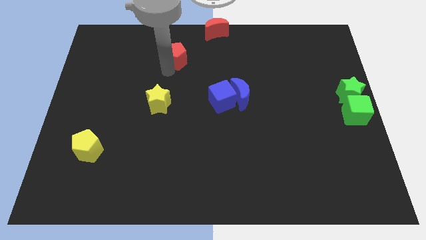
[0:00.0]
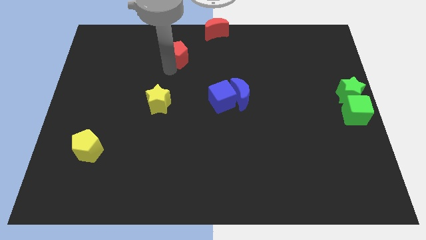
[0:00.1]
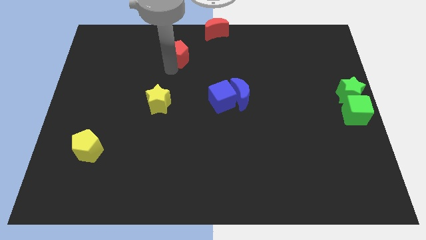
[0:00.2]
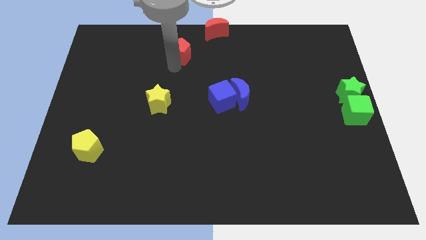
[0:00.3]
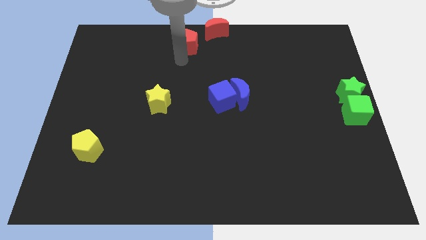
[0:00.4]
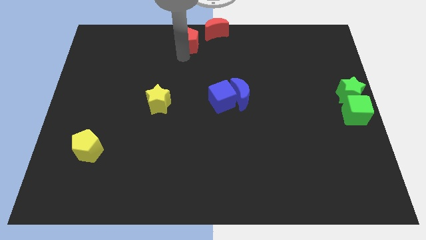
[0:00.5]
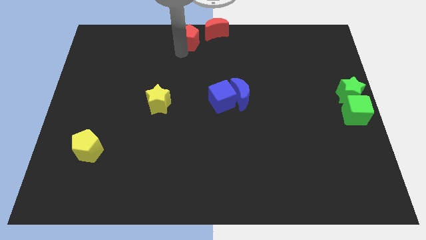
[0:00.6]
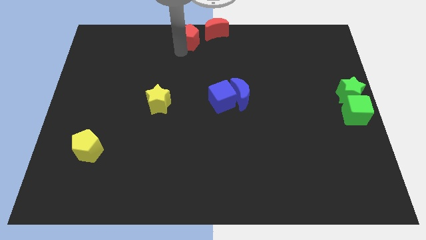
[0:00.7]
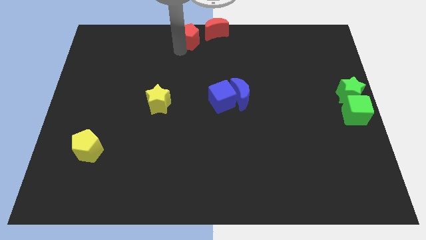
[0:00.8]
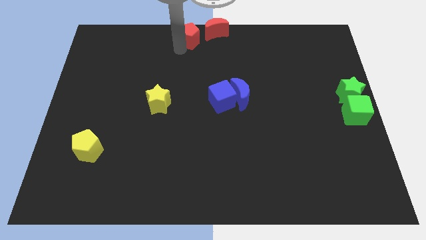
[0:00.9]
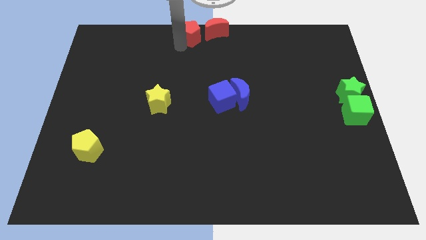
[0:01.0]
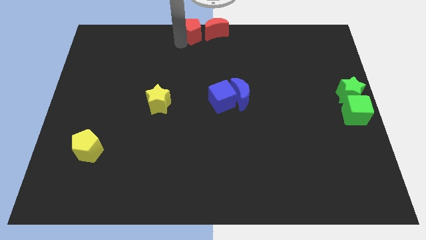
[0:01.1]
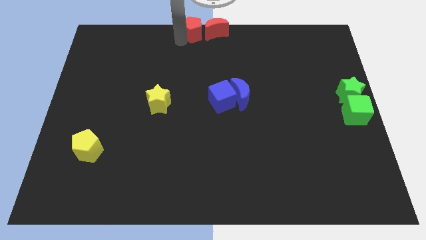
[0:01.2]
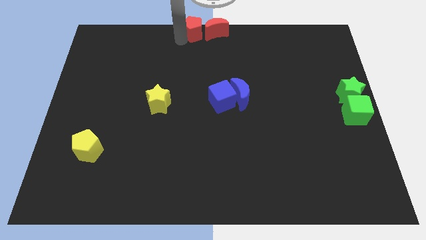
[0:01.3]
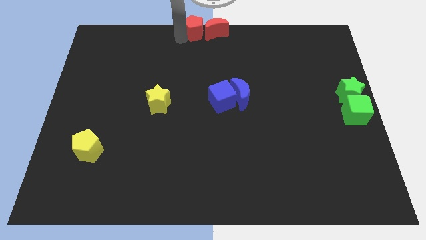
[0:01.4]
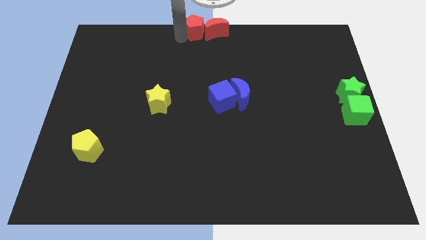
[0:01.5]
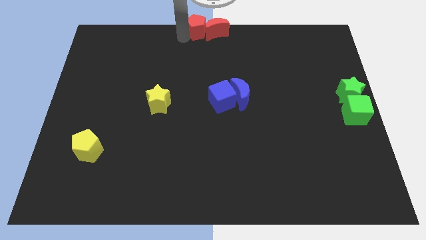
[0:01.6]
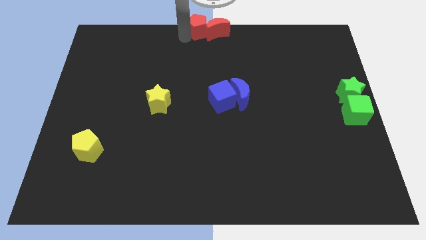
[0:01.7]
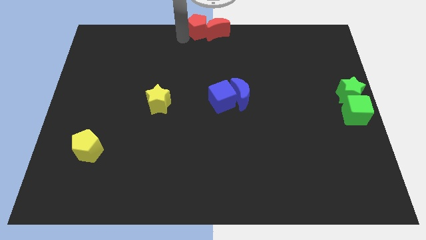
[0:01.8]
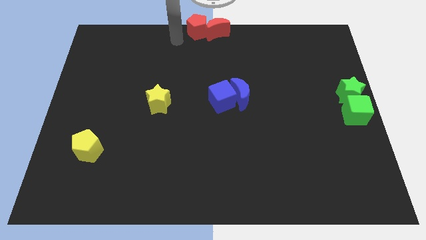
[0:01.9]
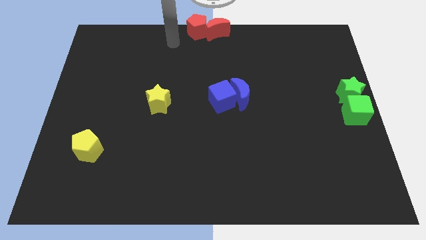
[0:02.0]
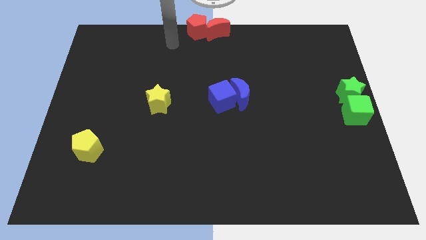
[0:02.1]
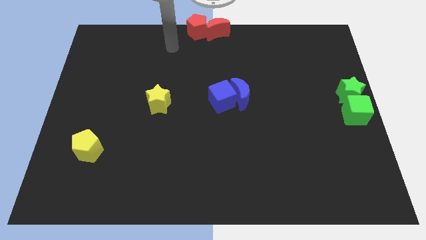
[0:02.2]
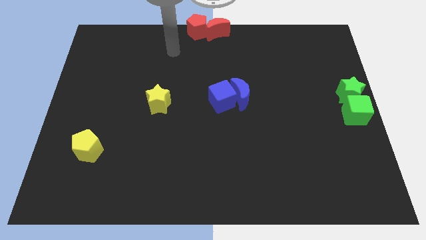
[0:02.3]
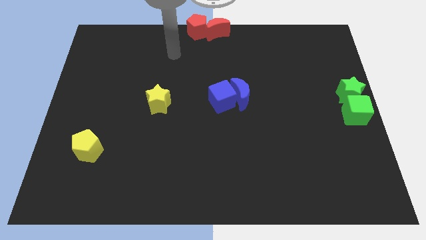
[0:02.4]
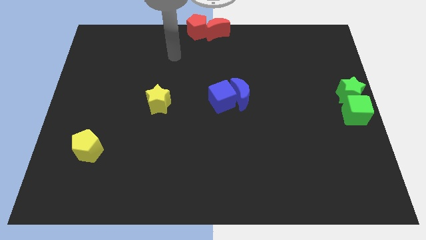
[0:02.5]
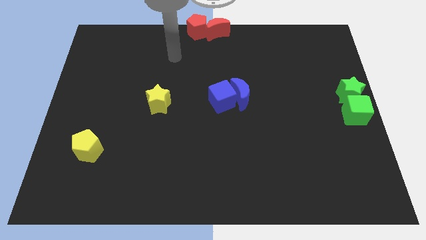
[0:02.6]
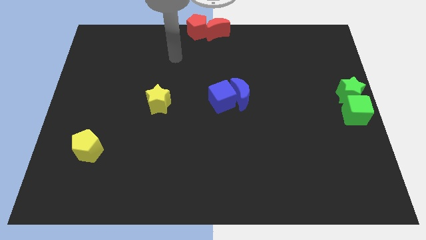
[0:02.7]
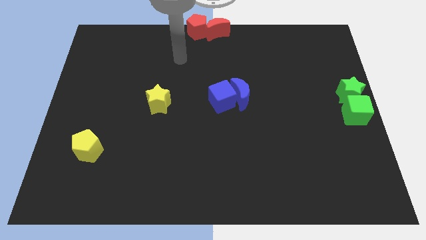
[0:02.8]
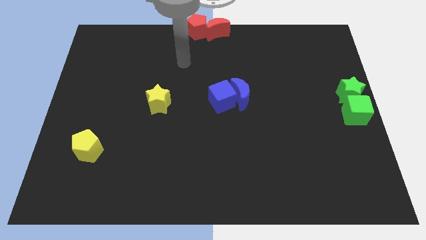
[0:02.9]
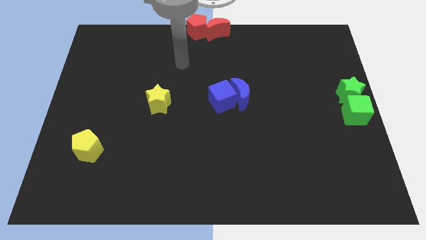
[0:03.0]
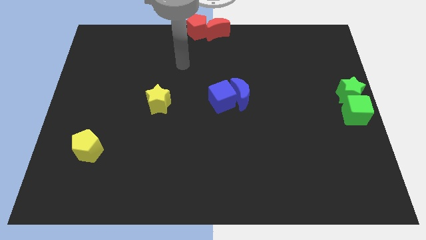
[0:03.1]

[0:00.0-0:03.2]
push the red pentagon left to the red moon

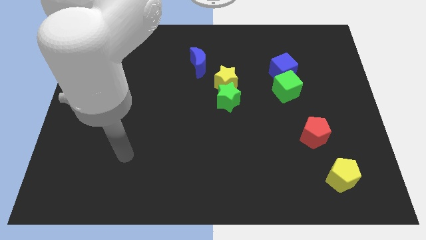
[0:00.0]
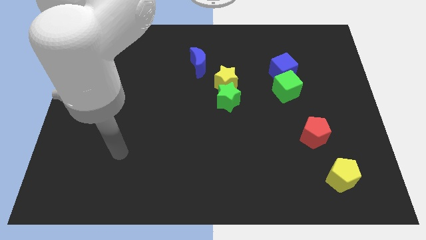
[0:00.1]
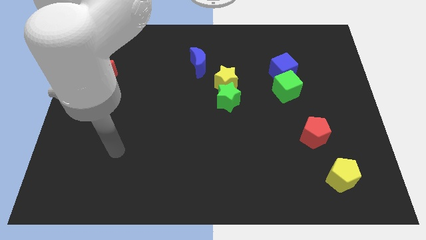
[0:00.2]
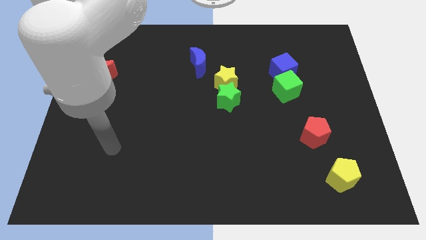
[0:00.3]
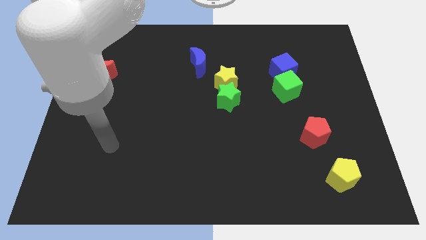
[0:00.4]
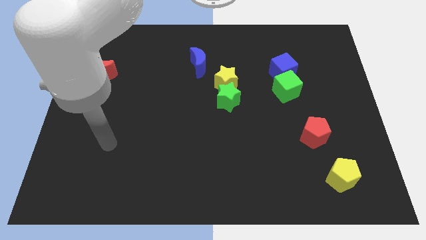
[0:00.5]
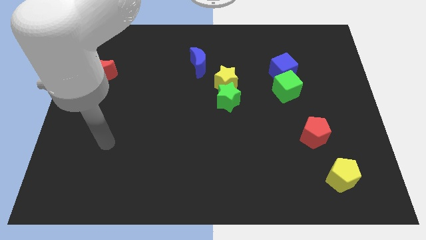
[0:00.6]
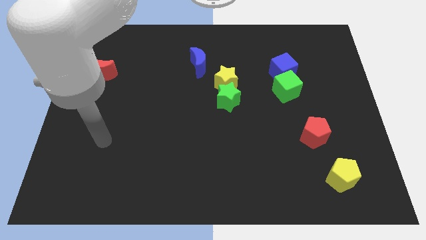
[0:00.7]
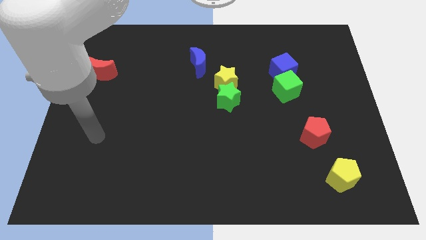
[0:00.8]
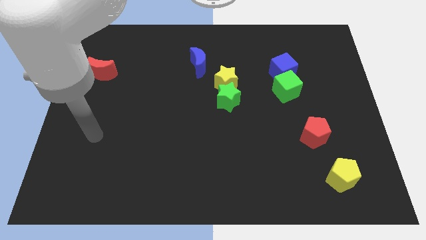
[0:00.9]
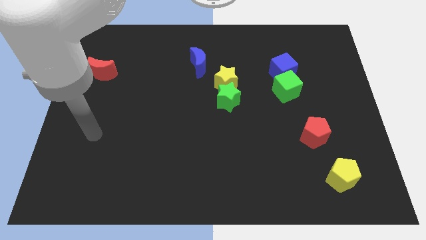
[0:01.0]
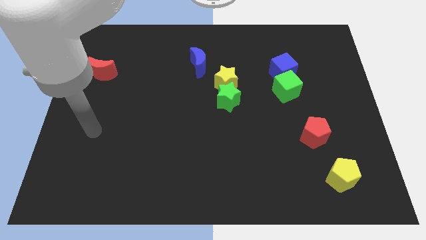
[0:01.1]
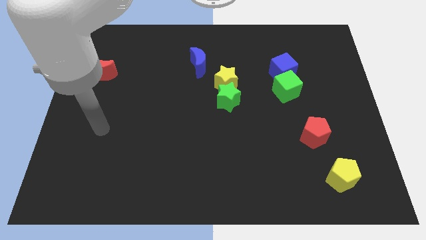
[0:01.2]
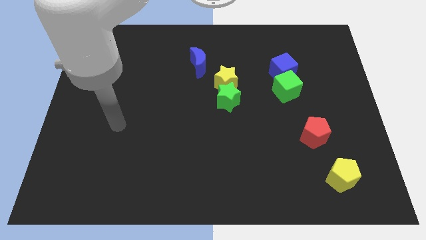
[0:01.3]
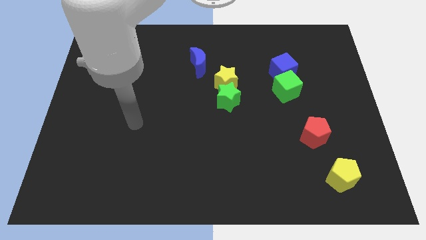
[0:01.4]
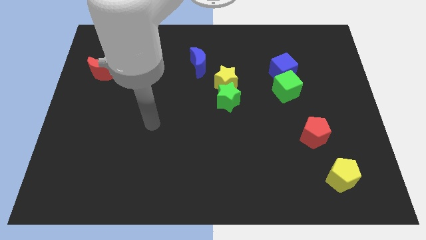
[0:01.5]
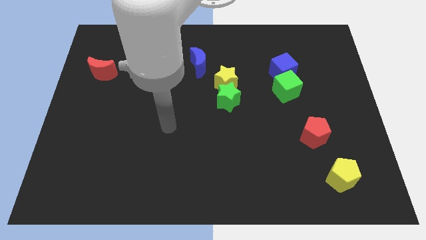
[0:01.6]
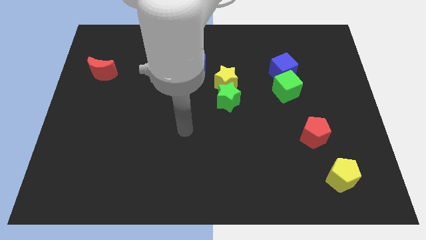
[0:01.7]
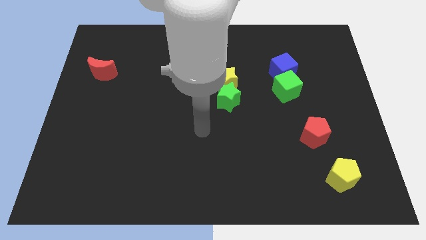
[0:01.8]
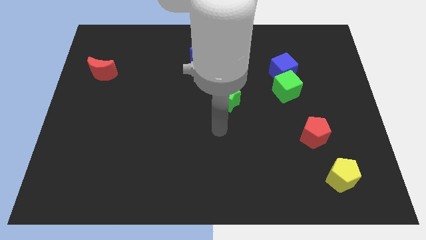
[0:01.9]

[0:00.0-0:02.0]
point your arm towards the center of the board

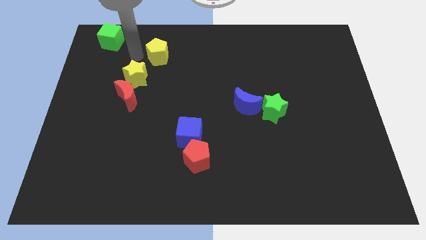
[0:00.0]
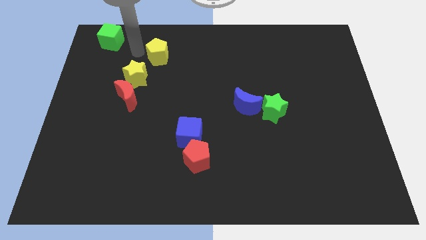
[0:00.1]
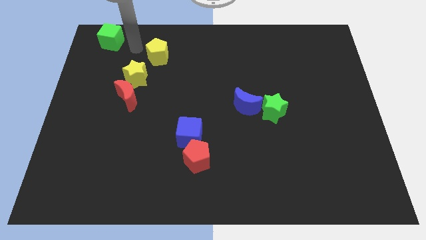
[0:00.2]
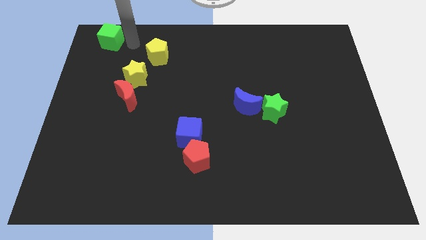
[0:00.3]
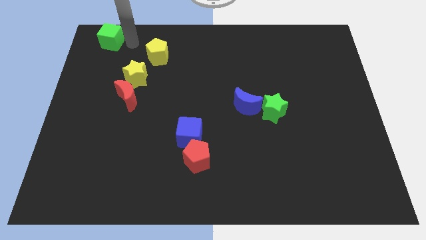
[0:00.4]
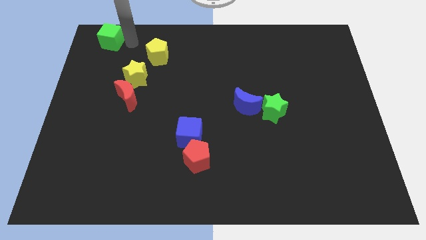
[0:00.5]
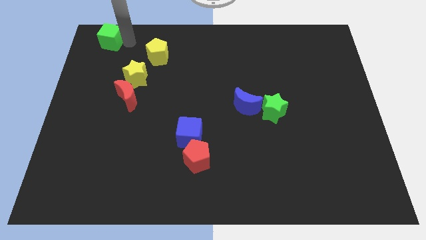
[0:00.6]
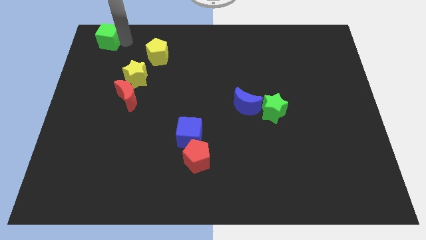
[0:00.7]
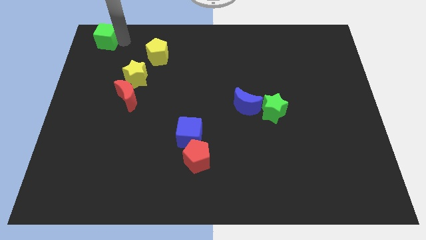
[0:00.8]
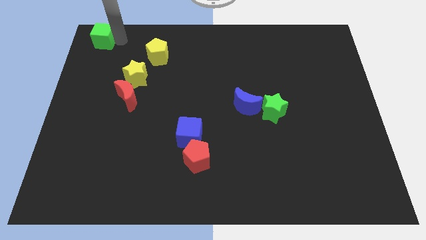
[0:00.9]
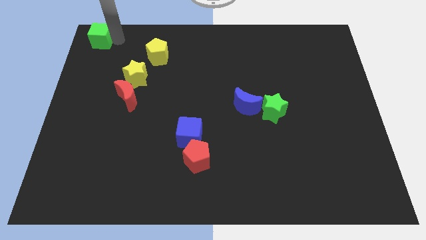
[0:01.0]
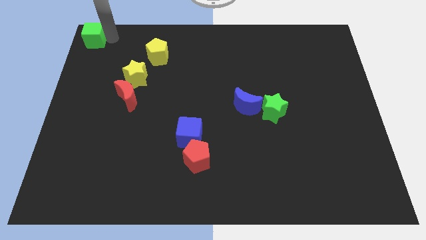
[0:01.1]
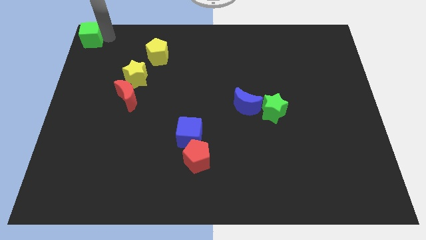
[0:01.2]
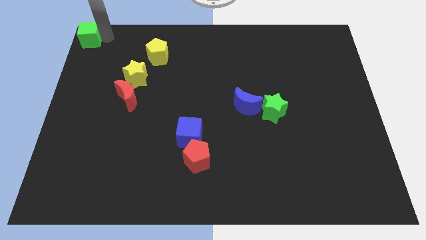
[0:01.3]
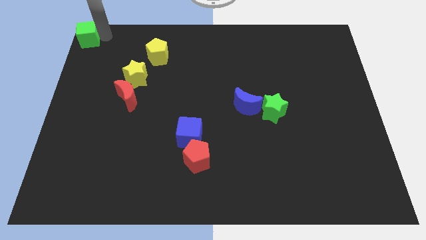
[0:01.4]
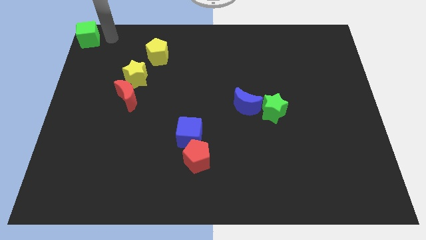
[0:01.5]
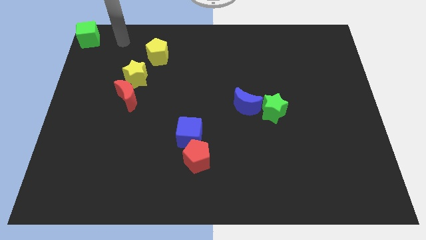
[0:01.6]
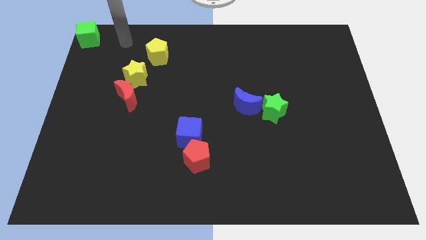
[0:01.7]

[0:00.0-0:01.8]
move the green cube to the top left corner

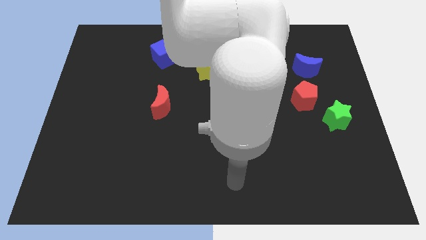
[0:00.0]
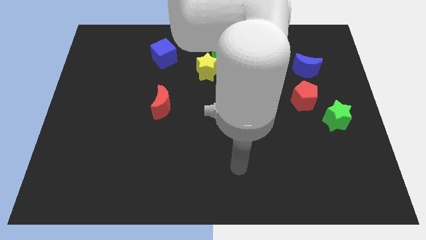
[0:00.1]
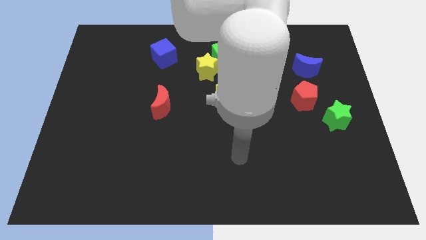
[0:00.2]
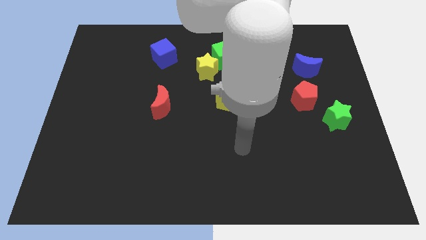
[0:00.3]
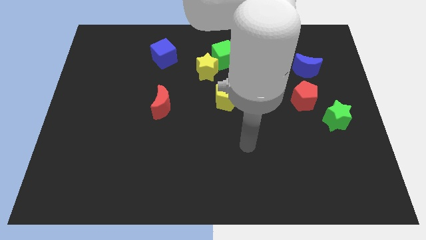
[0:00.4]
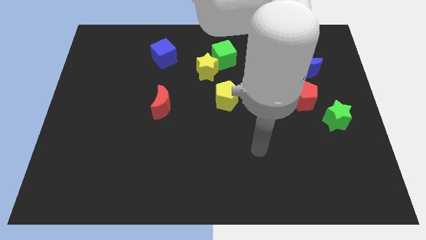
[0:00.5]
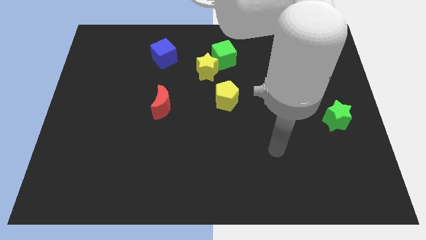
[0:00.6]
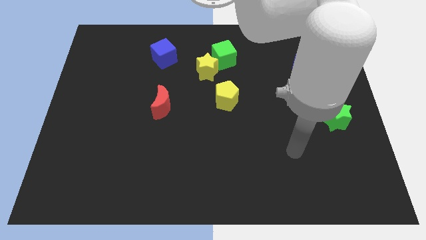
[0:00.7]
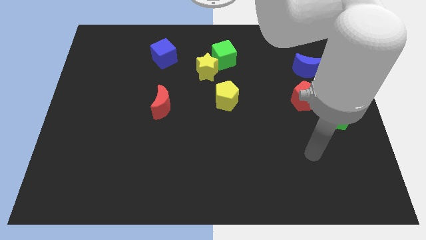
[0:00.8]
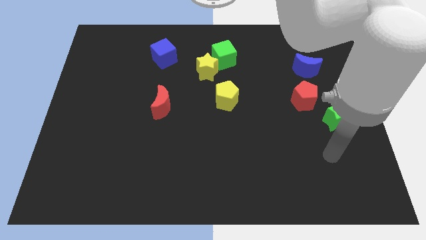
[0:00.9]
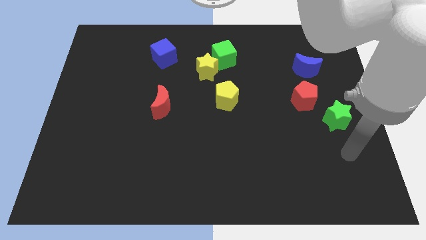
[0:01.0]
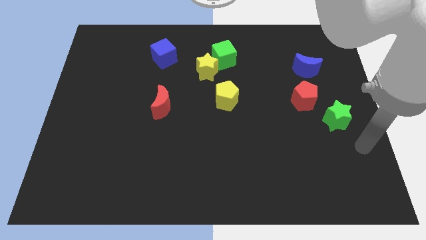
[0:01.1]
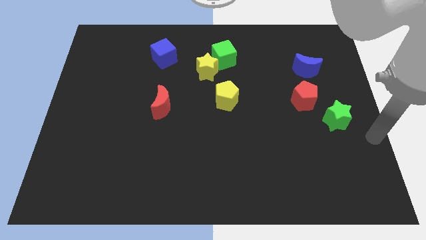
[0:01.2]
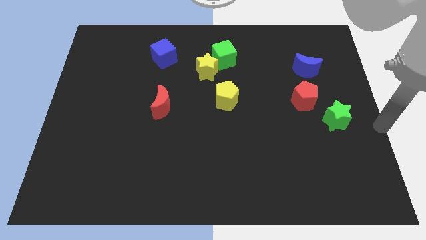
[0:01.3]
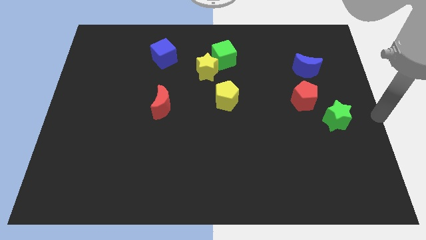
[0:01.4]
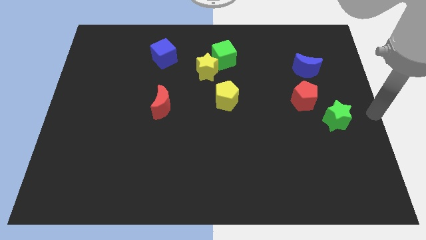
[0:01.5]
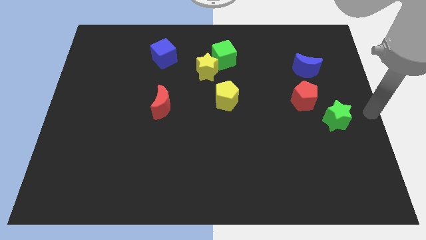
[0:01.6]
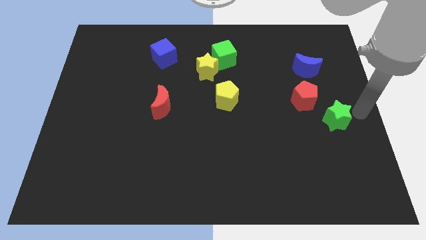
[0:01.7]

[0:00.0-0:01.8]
move your arm to the right side of the green star

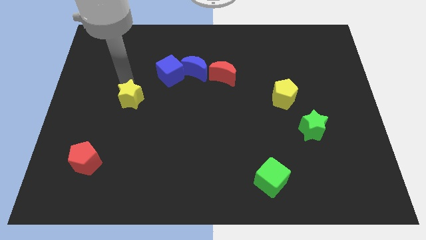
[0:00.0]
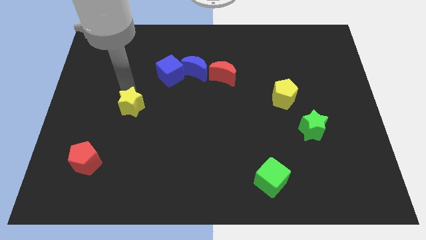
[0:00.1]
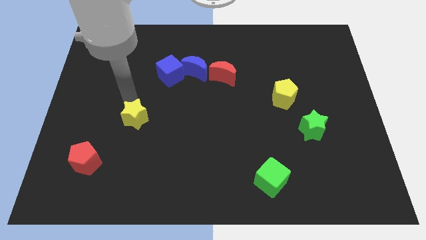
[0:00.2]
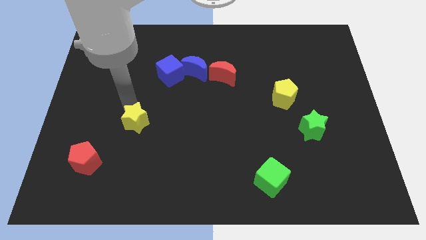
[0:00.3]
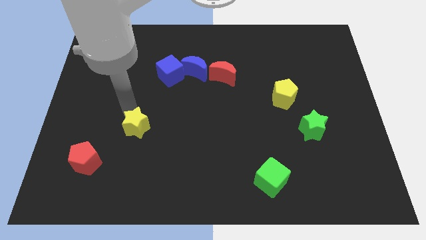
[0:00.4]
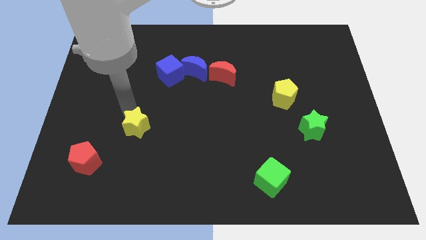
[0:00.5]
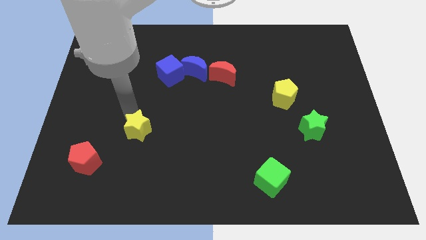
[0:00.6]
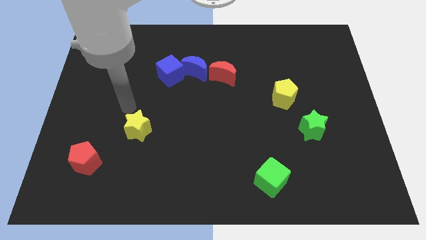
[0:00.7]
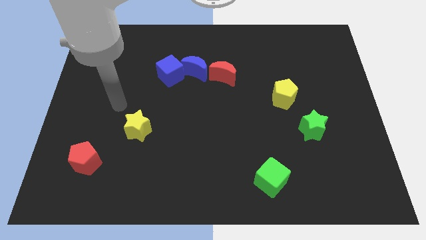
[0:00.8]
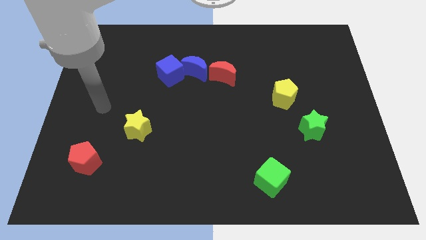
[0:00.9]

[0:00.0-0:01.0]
put the yellow star parallel to the left of the green star
